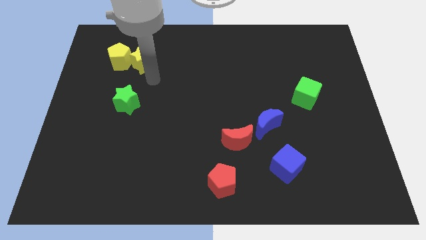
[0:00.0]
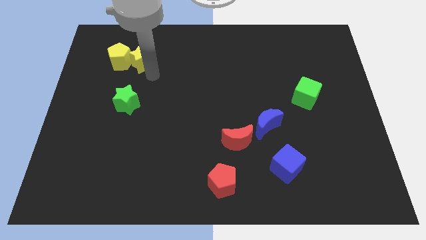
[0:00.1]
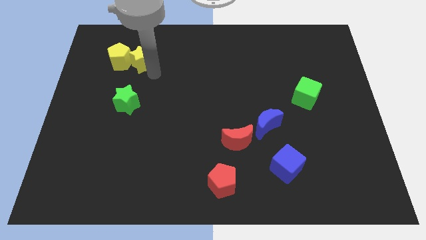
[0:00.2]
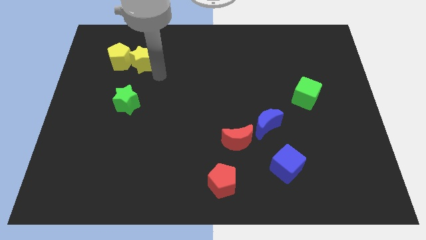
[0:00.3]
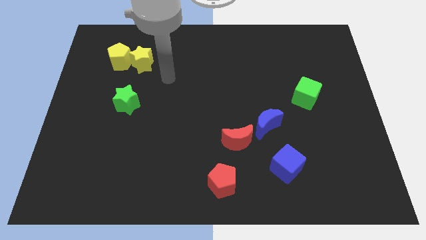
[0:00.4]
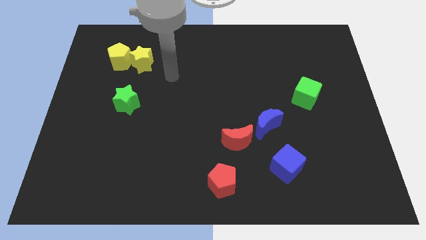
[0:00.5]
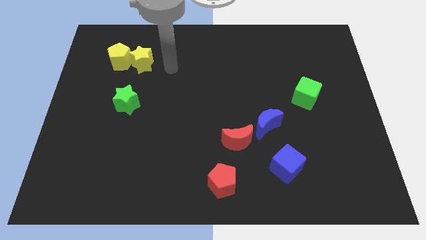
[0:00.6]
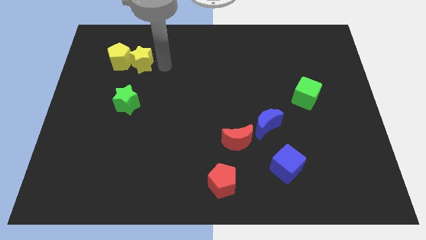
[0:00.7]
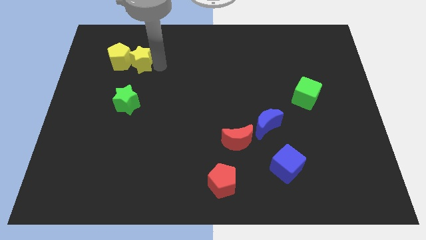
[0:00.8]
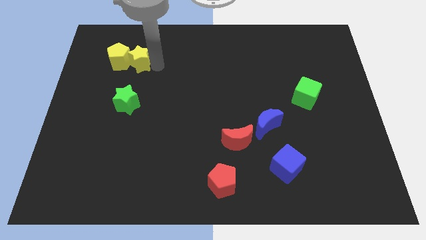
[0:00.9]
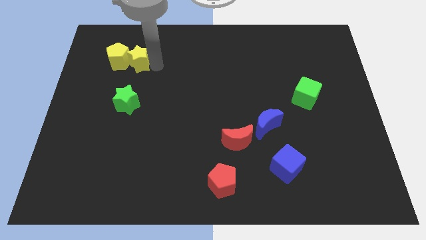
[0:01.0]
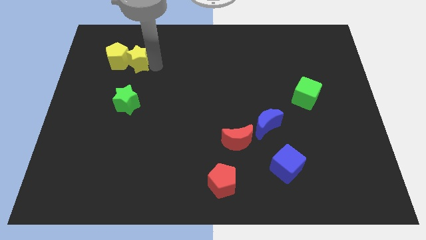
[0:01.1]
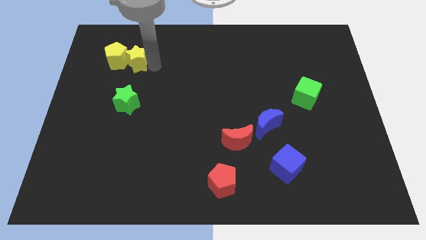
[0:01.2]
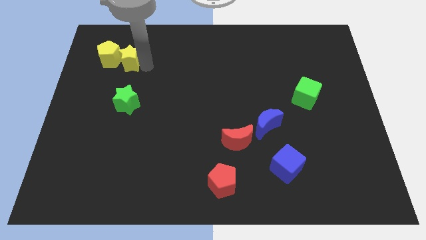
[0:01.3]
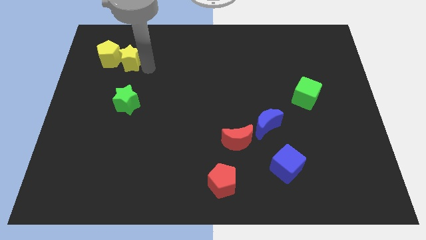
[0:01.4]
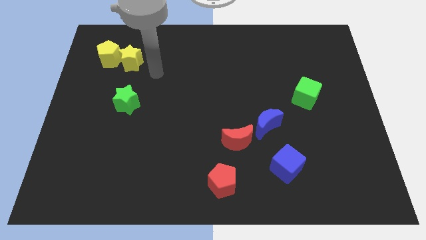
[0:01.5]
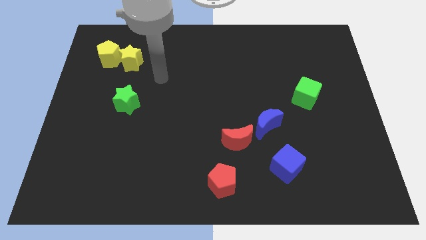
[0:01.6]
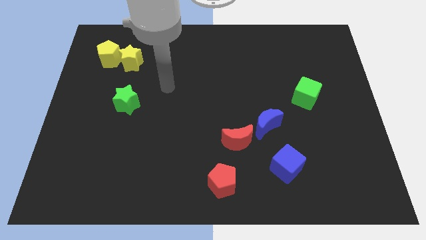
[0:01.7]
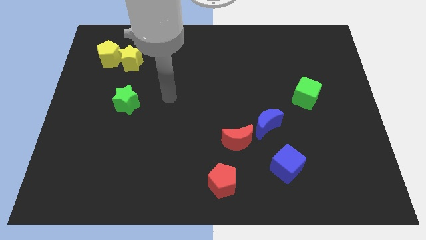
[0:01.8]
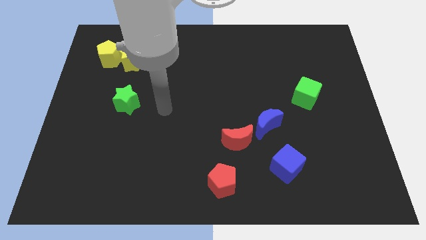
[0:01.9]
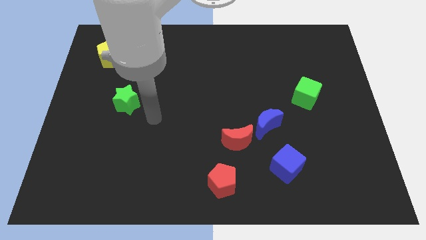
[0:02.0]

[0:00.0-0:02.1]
push the yellow blocks towards left side

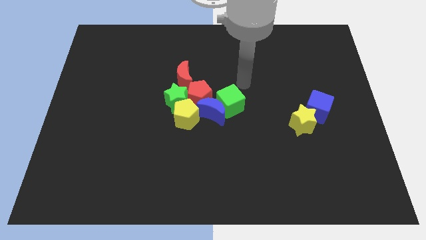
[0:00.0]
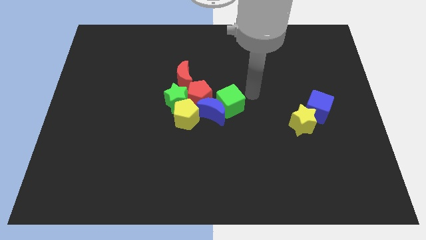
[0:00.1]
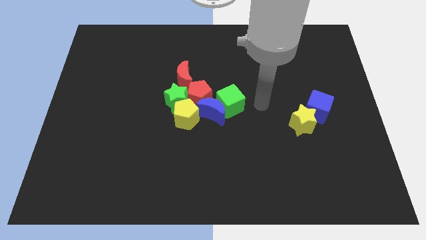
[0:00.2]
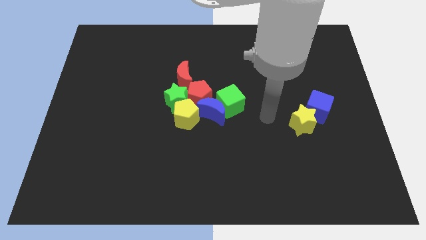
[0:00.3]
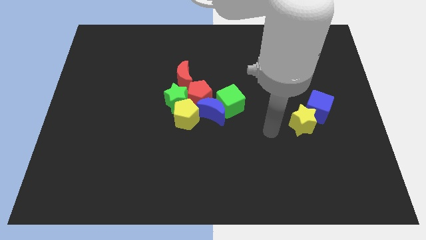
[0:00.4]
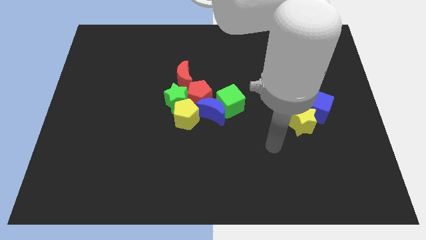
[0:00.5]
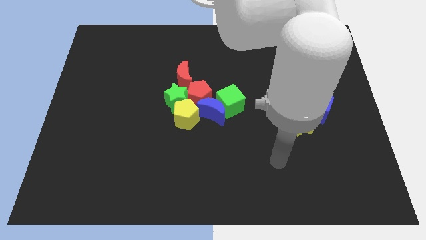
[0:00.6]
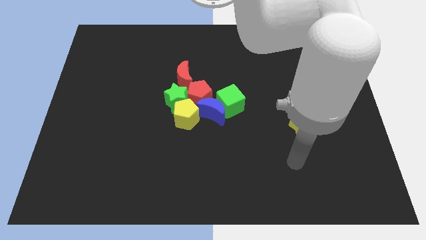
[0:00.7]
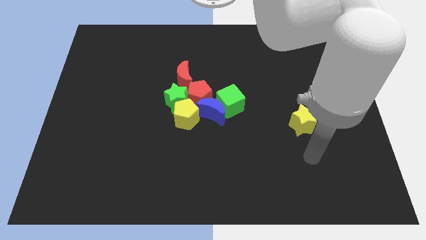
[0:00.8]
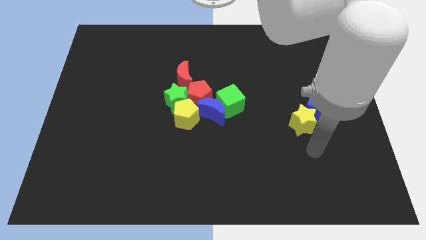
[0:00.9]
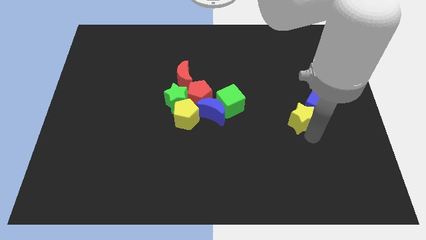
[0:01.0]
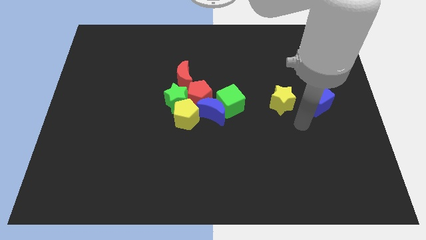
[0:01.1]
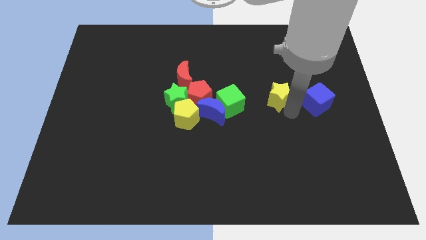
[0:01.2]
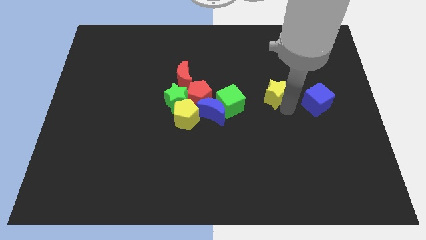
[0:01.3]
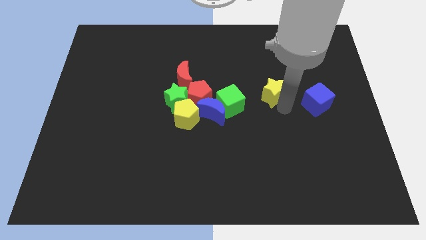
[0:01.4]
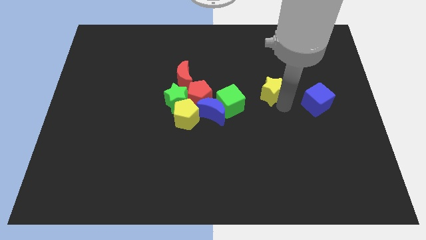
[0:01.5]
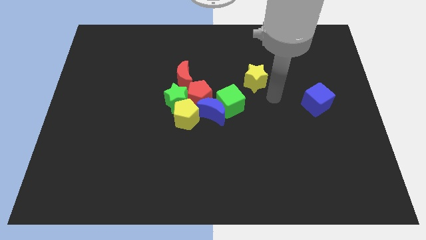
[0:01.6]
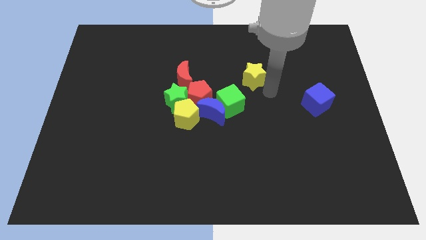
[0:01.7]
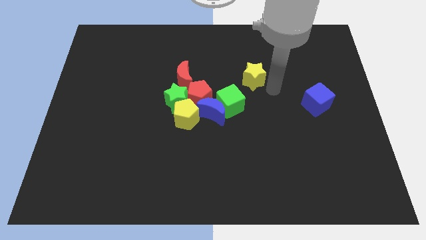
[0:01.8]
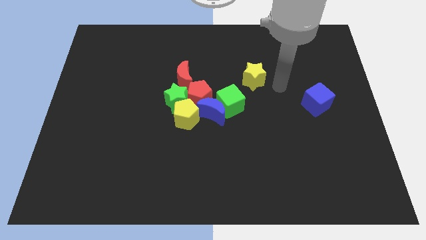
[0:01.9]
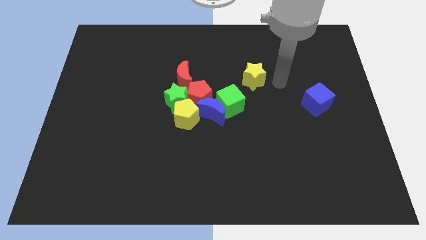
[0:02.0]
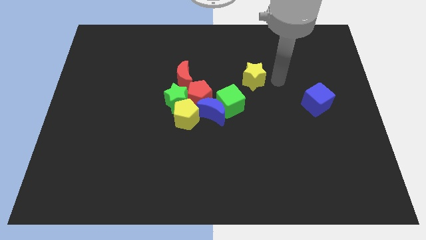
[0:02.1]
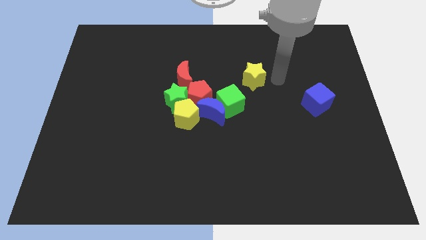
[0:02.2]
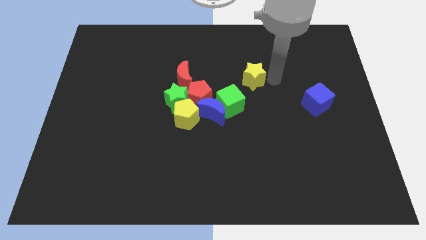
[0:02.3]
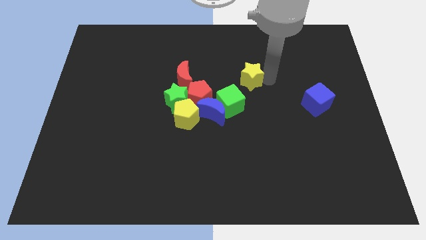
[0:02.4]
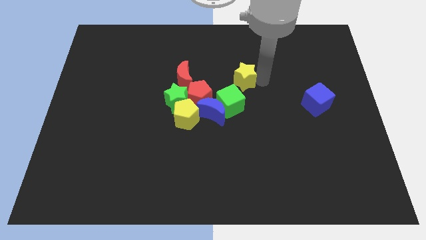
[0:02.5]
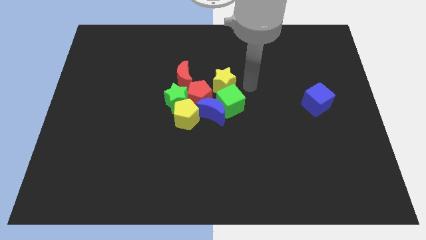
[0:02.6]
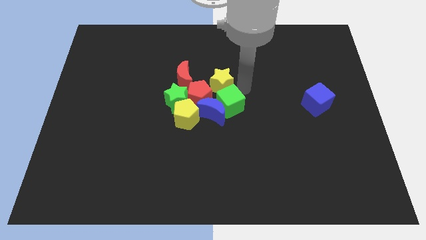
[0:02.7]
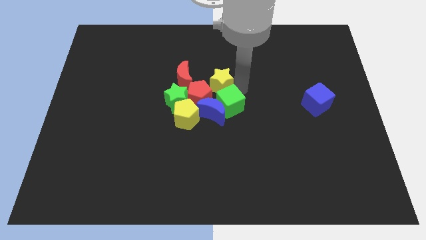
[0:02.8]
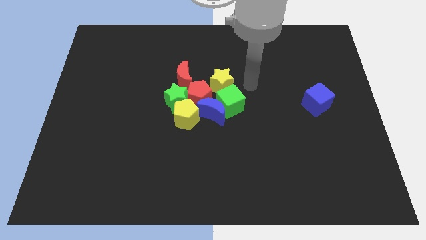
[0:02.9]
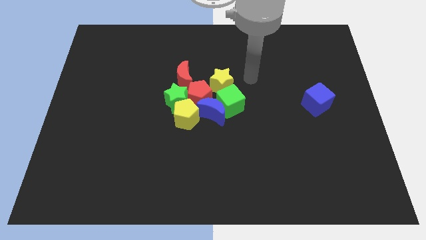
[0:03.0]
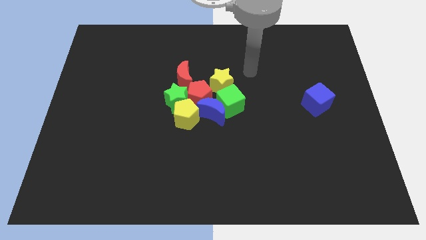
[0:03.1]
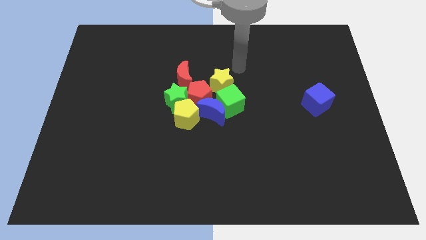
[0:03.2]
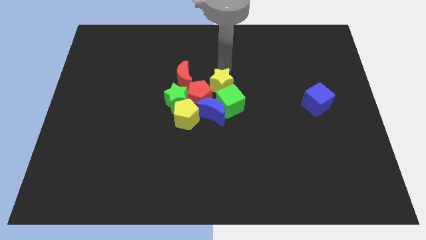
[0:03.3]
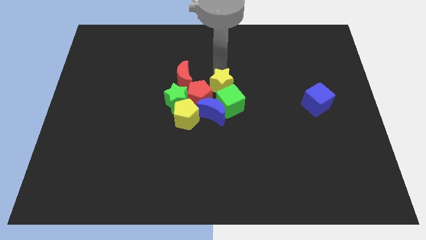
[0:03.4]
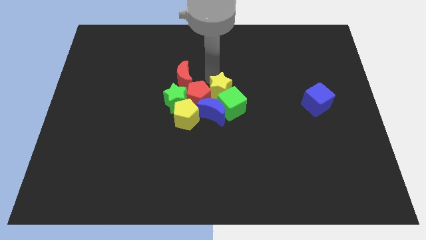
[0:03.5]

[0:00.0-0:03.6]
move the yellow star to the top of the green cube

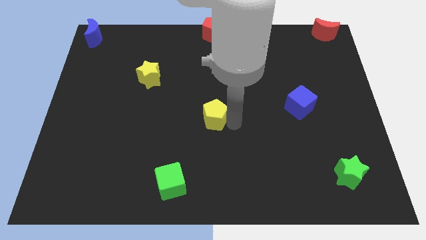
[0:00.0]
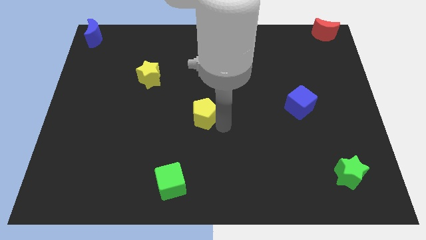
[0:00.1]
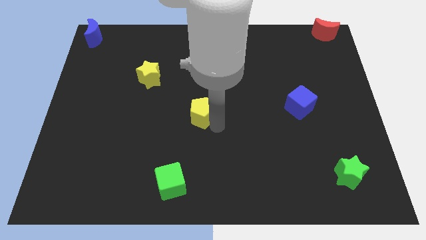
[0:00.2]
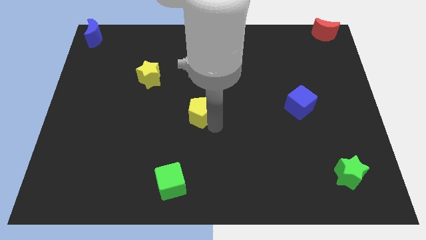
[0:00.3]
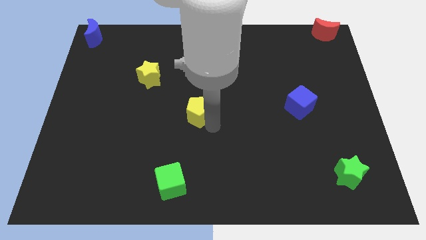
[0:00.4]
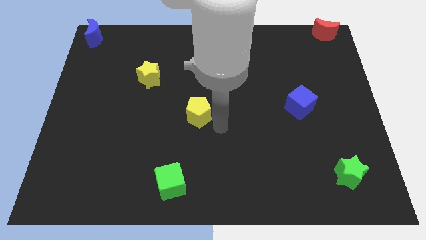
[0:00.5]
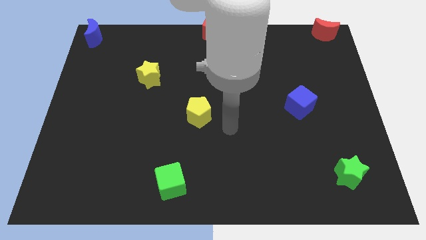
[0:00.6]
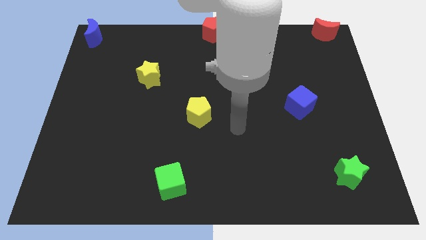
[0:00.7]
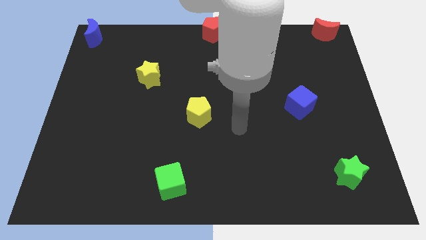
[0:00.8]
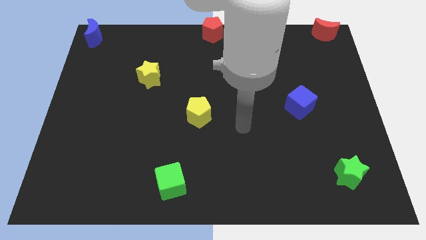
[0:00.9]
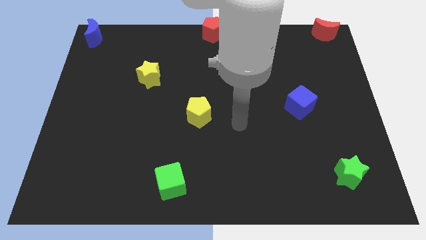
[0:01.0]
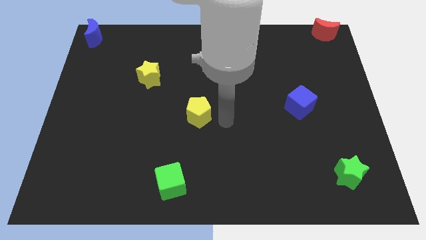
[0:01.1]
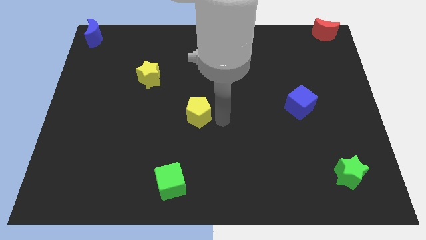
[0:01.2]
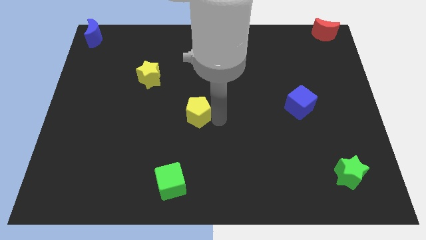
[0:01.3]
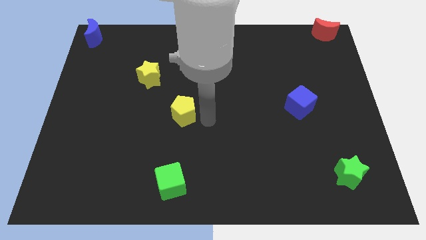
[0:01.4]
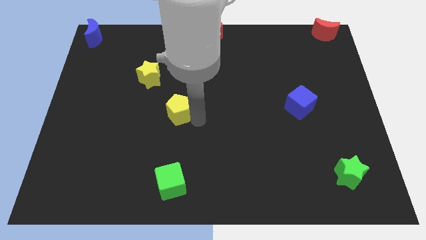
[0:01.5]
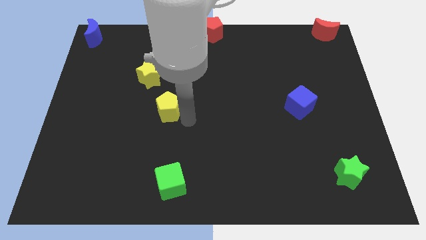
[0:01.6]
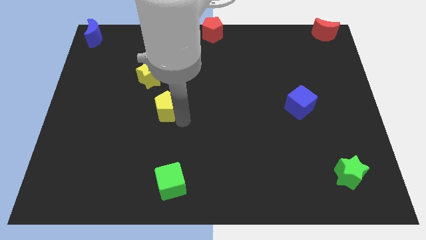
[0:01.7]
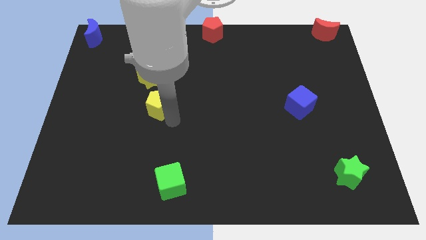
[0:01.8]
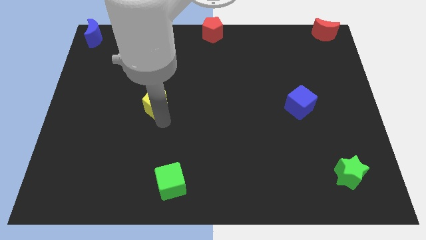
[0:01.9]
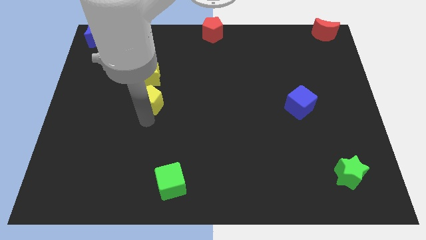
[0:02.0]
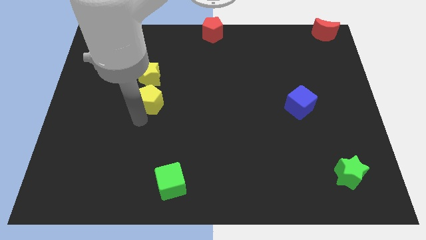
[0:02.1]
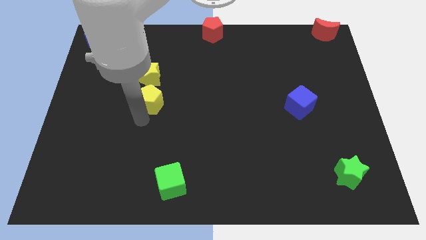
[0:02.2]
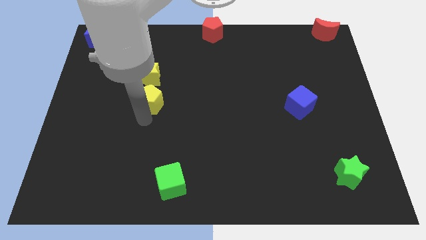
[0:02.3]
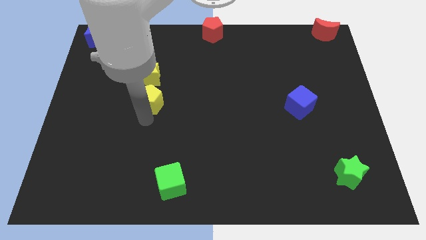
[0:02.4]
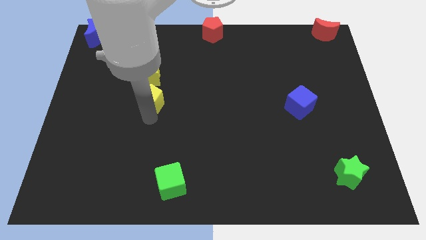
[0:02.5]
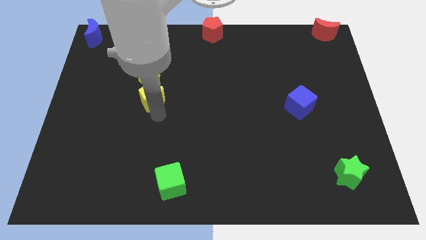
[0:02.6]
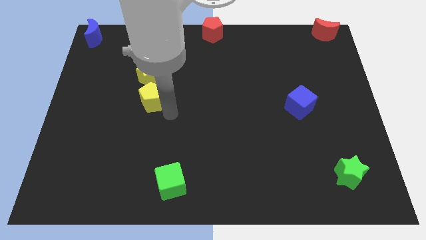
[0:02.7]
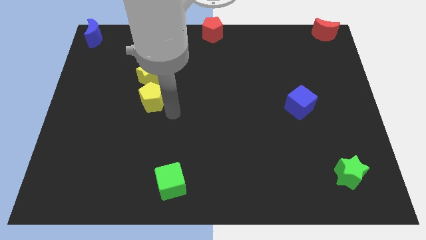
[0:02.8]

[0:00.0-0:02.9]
move yellow pentagon below the yellow star

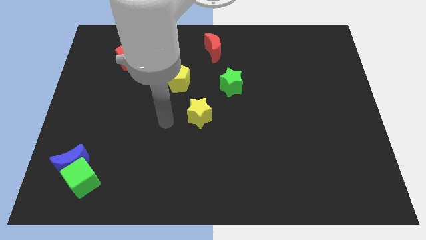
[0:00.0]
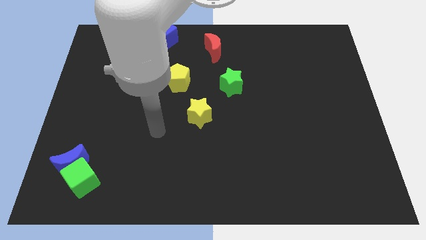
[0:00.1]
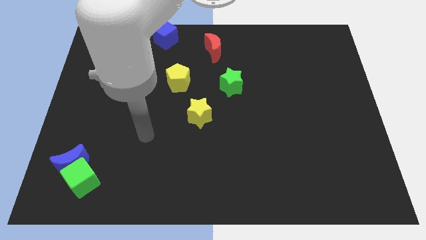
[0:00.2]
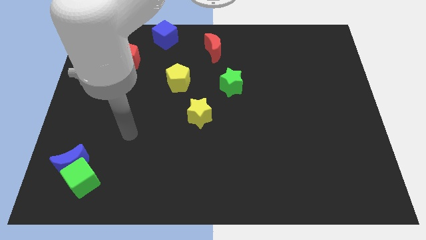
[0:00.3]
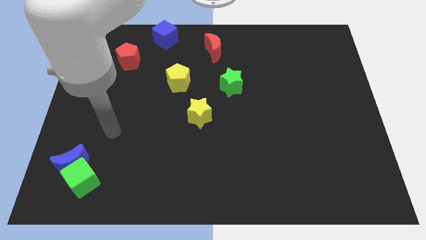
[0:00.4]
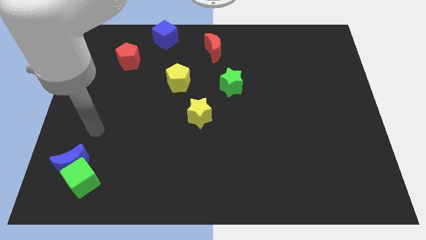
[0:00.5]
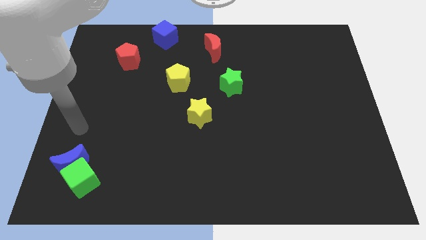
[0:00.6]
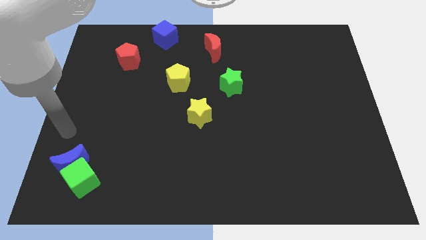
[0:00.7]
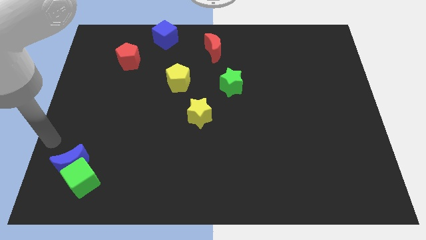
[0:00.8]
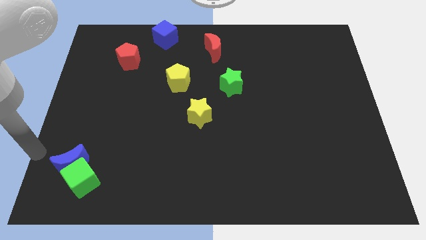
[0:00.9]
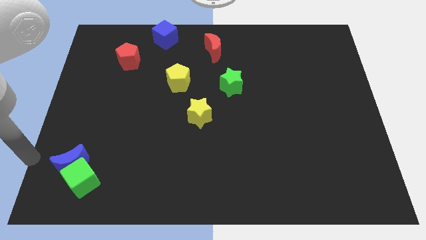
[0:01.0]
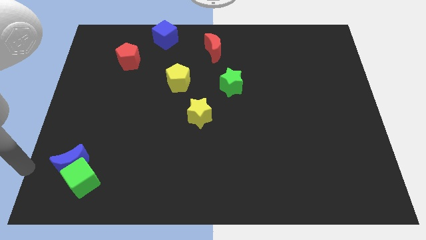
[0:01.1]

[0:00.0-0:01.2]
move away from the yellow star
